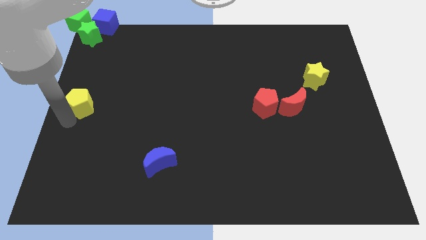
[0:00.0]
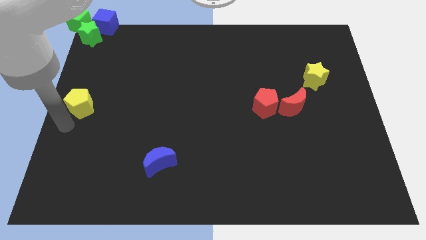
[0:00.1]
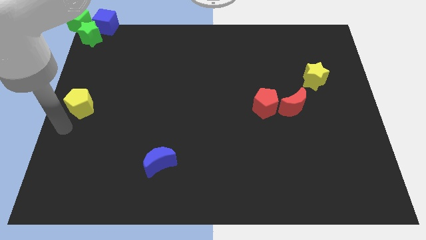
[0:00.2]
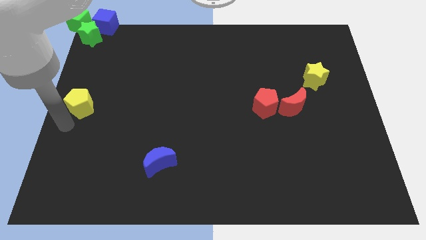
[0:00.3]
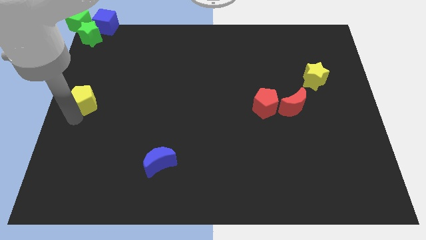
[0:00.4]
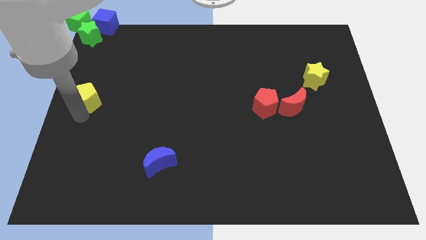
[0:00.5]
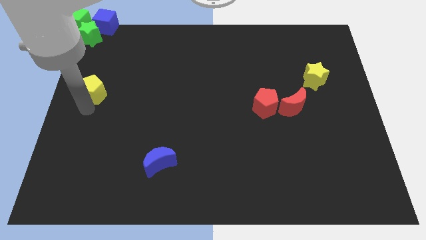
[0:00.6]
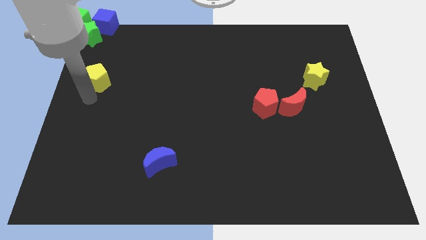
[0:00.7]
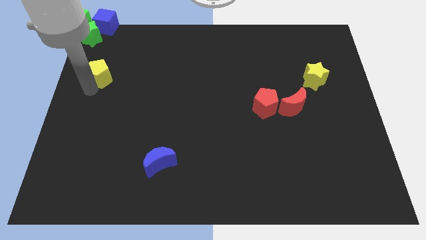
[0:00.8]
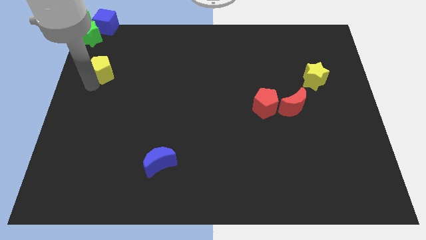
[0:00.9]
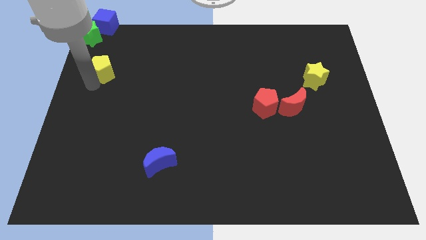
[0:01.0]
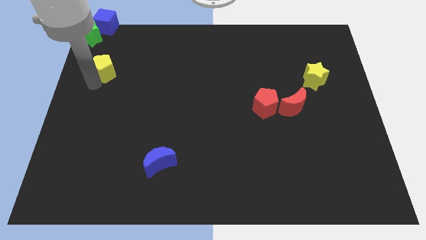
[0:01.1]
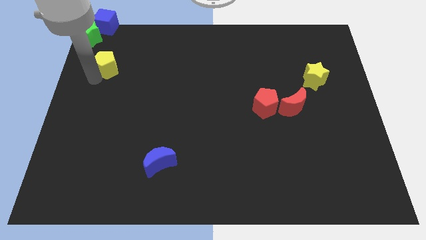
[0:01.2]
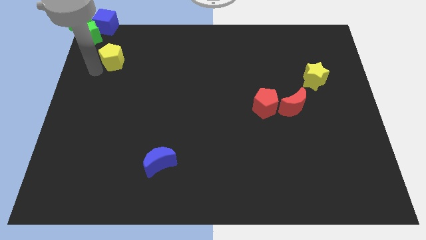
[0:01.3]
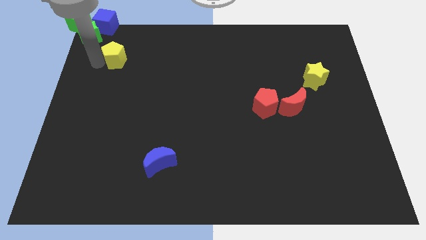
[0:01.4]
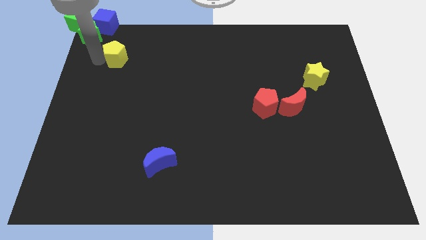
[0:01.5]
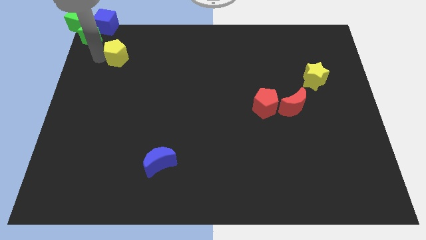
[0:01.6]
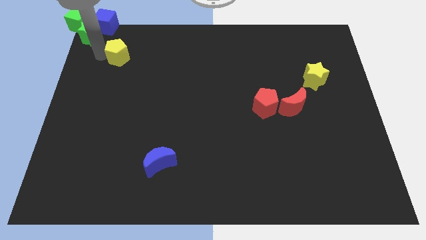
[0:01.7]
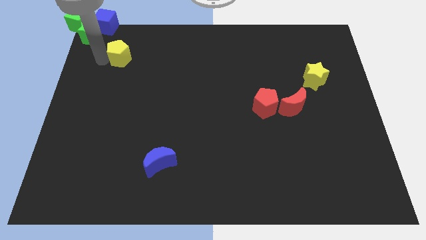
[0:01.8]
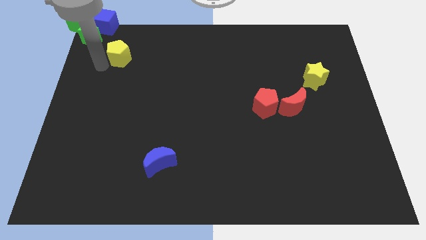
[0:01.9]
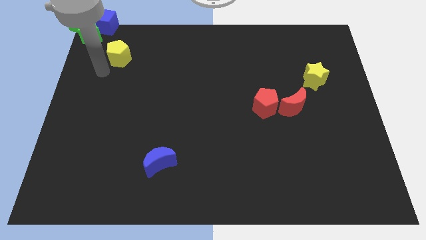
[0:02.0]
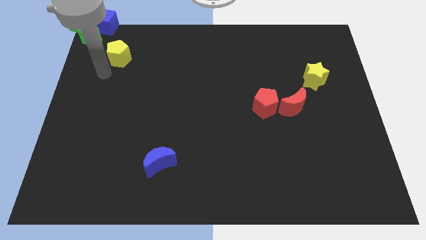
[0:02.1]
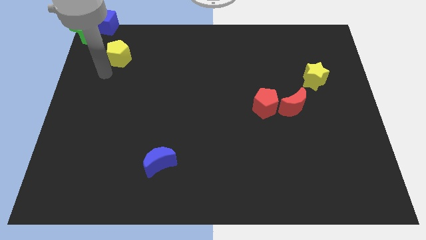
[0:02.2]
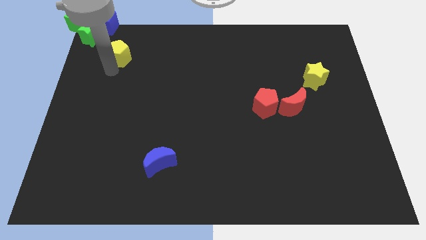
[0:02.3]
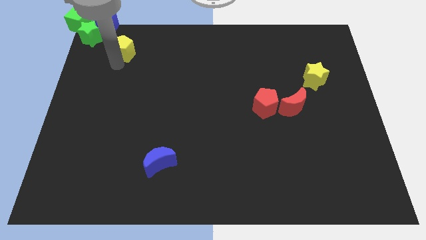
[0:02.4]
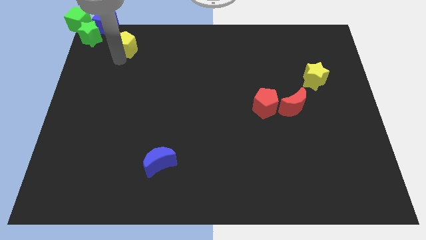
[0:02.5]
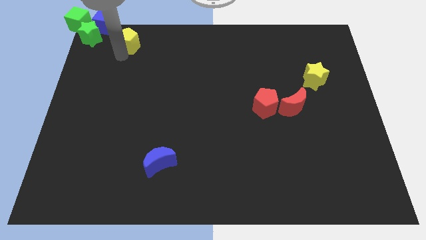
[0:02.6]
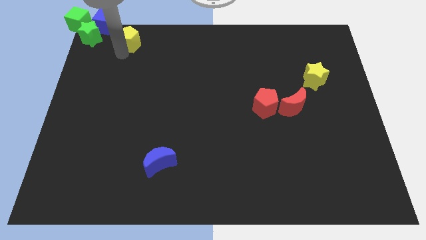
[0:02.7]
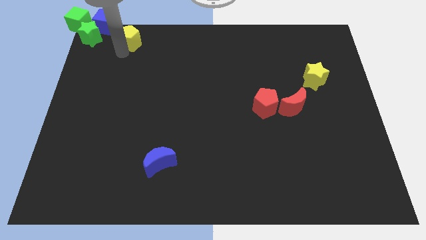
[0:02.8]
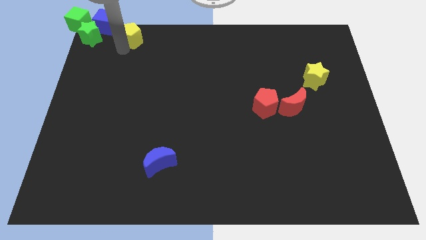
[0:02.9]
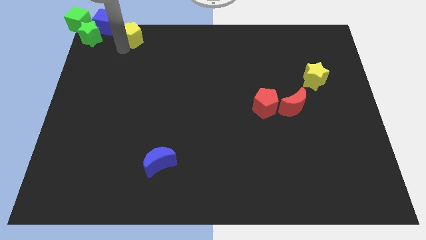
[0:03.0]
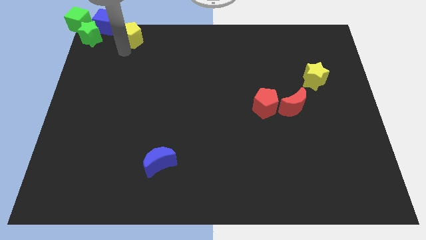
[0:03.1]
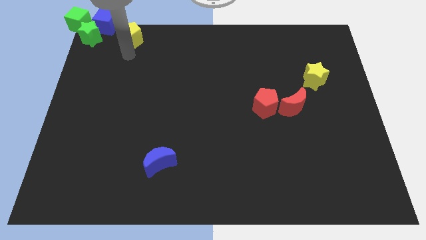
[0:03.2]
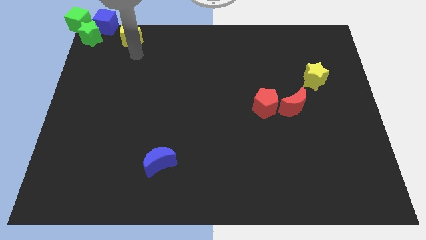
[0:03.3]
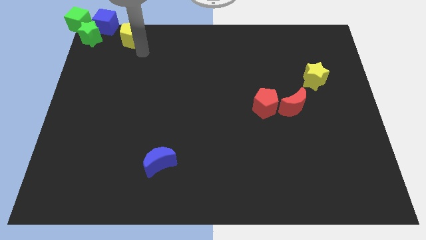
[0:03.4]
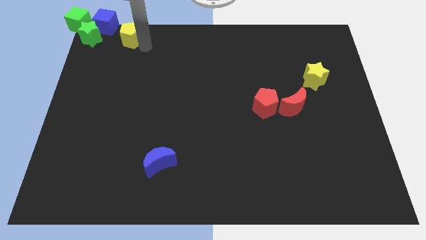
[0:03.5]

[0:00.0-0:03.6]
place the yellow pentagon below the blue cube

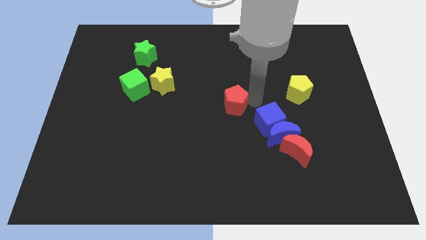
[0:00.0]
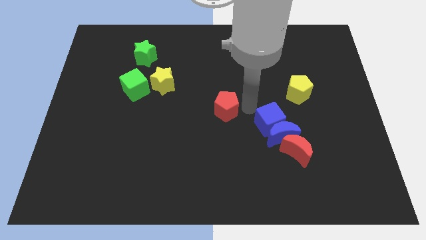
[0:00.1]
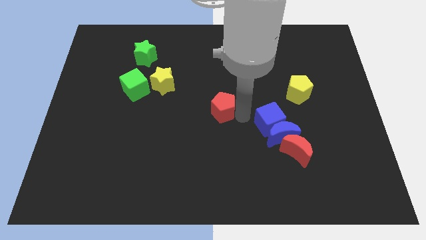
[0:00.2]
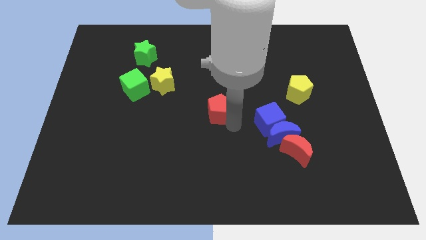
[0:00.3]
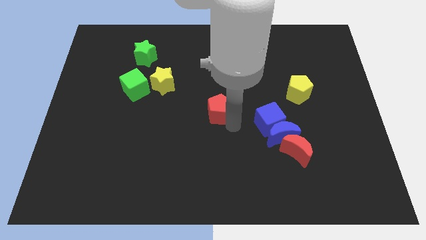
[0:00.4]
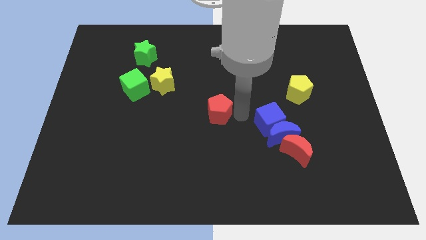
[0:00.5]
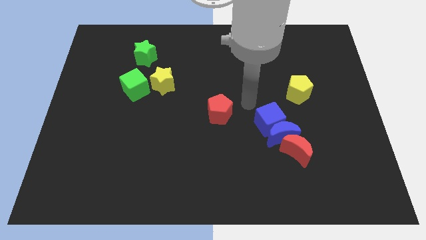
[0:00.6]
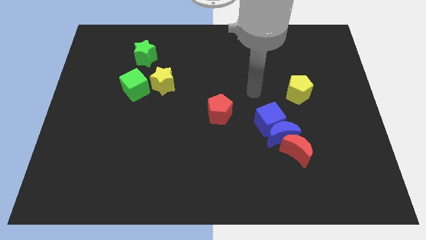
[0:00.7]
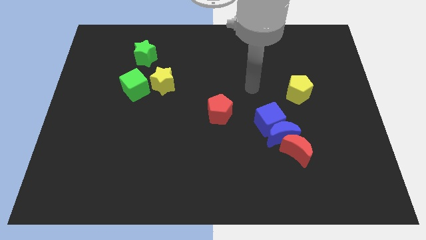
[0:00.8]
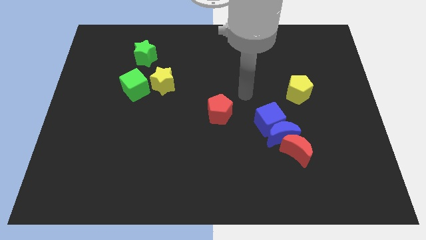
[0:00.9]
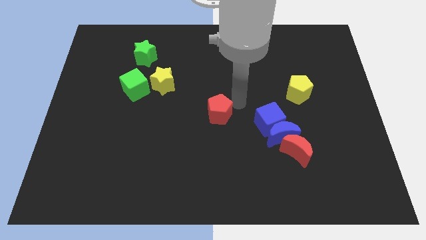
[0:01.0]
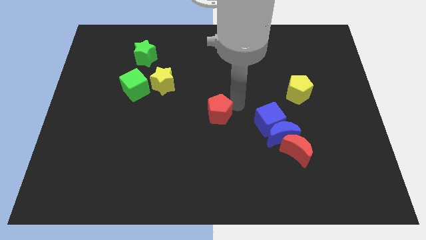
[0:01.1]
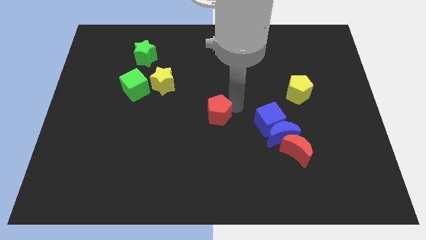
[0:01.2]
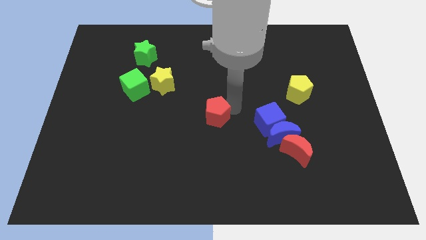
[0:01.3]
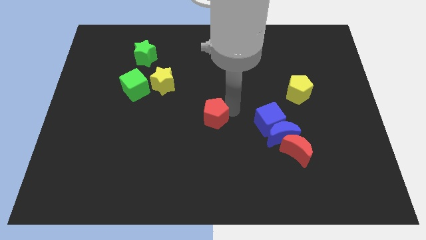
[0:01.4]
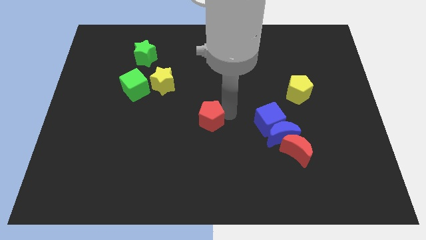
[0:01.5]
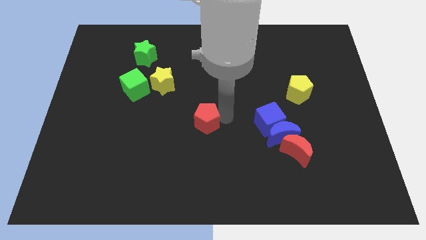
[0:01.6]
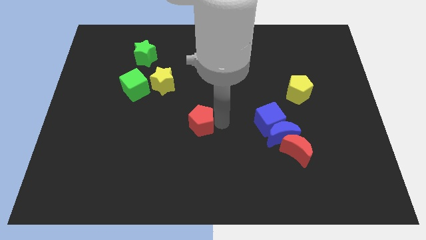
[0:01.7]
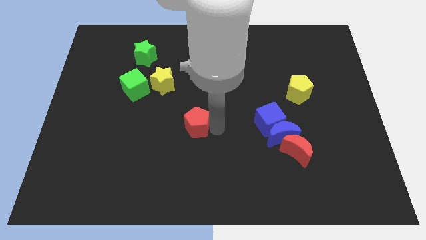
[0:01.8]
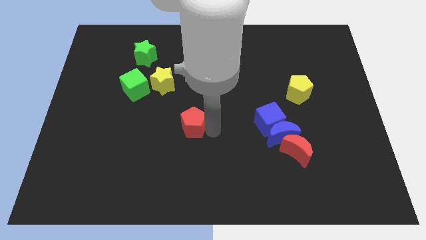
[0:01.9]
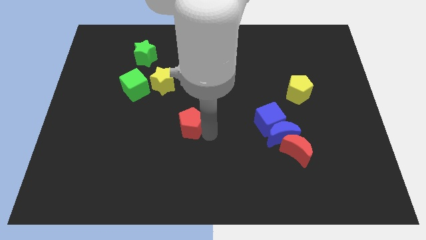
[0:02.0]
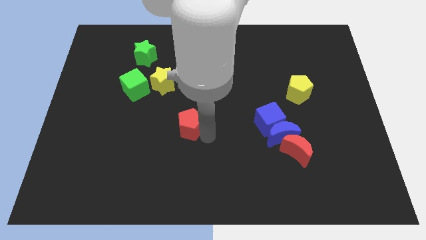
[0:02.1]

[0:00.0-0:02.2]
move red crescent to the center of the board

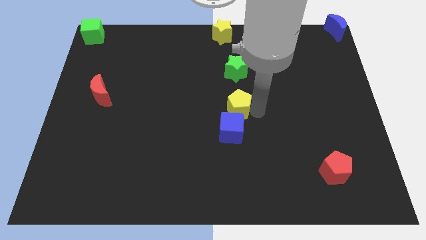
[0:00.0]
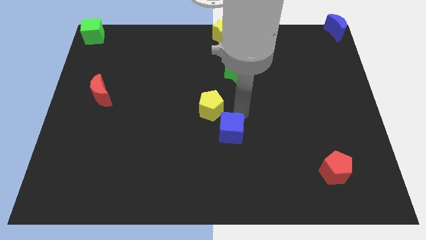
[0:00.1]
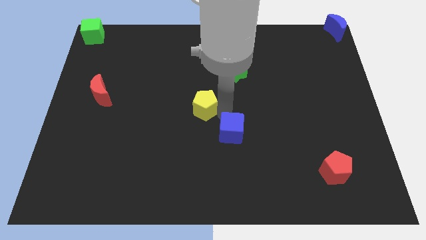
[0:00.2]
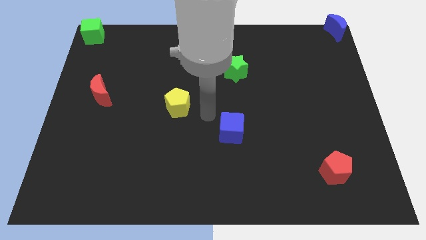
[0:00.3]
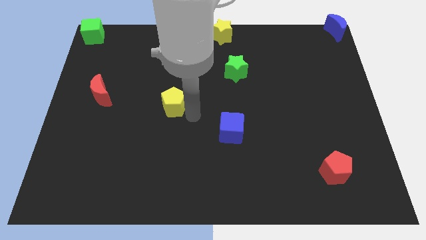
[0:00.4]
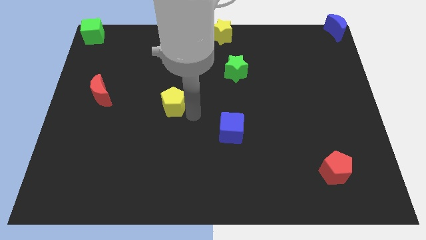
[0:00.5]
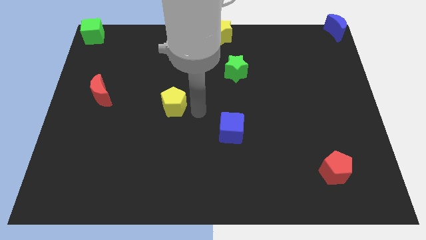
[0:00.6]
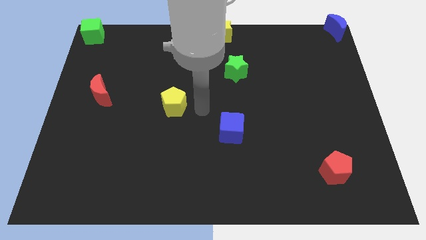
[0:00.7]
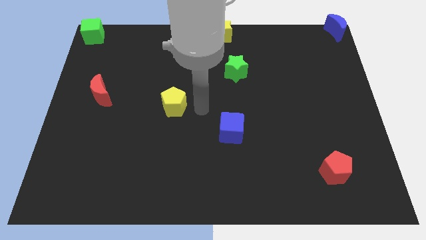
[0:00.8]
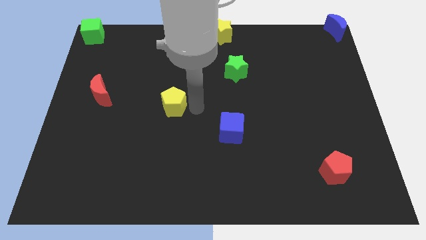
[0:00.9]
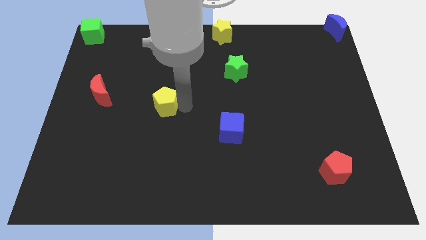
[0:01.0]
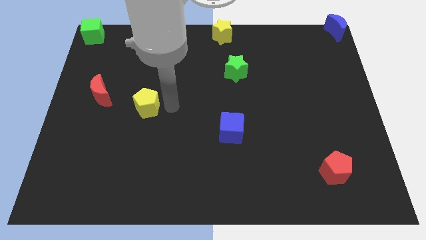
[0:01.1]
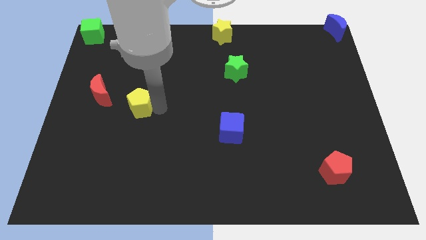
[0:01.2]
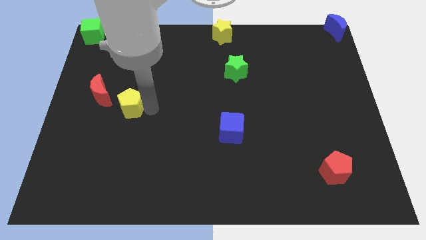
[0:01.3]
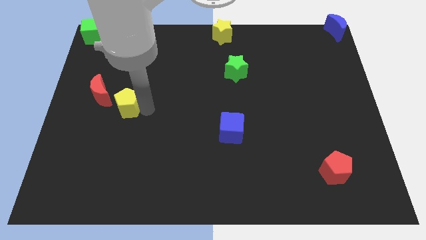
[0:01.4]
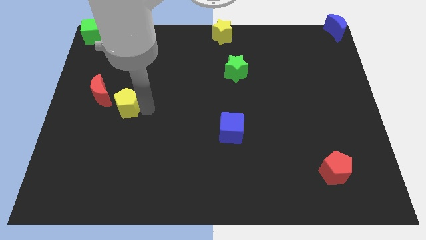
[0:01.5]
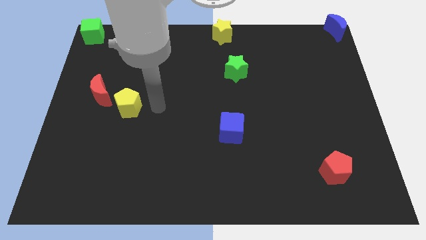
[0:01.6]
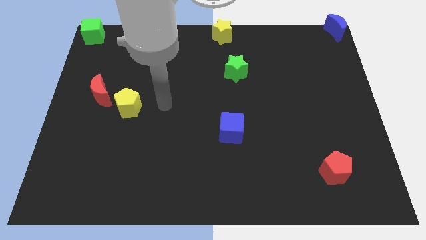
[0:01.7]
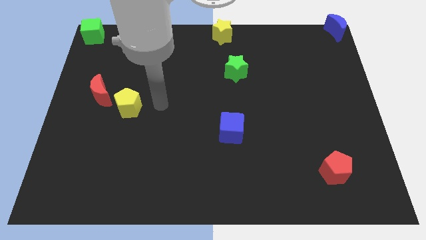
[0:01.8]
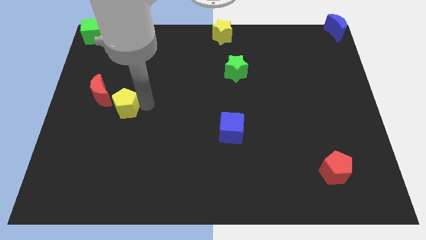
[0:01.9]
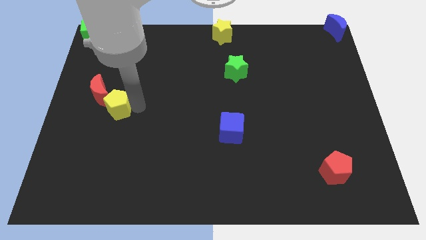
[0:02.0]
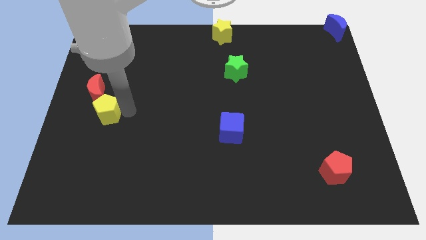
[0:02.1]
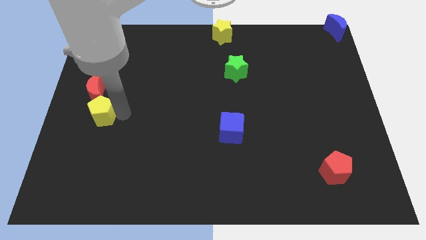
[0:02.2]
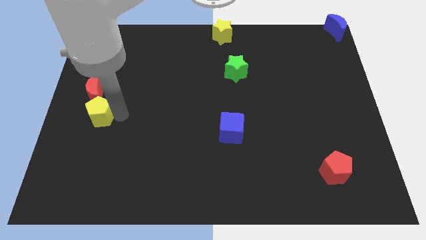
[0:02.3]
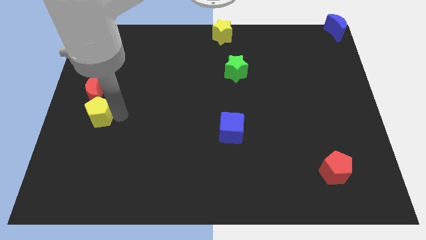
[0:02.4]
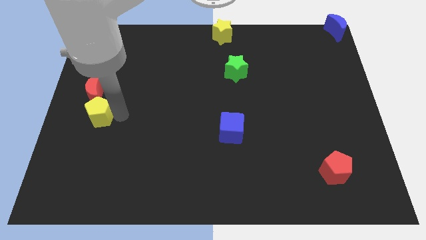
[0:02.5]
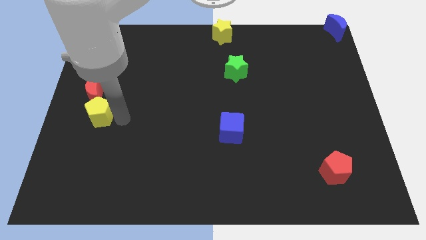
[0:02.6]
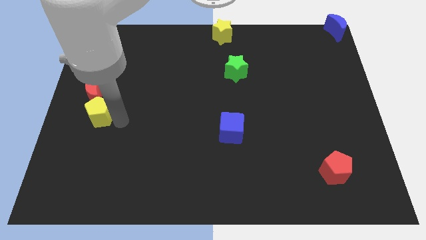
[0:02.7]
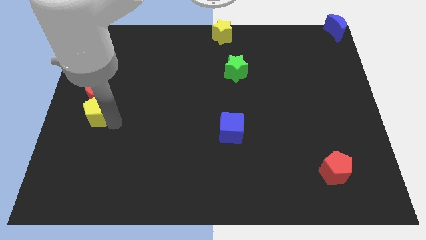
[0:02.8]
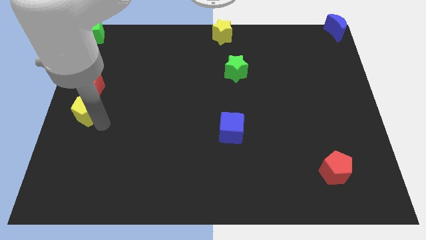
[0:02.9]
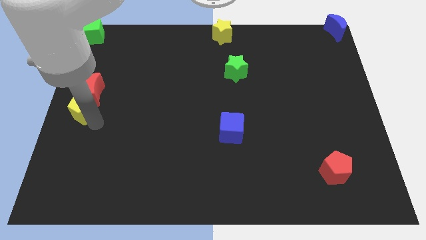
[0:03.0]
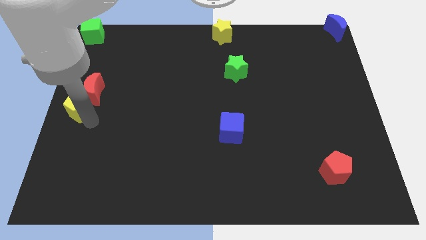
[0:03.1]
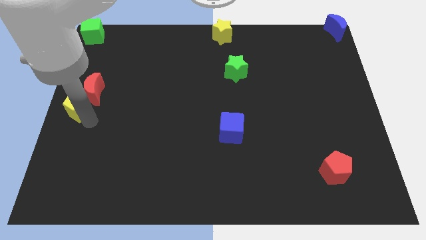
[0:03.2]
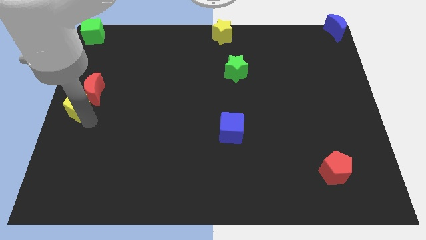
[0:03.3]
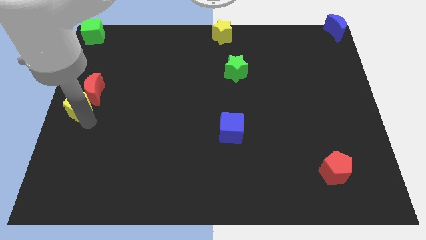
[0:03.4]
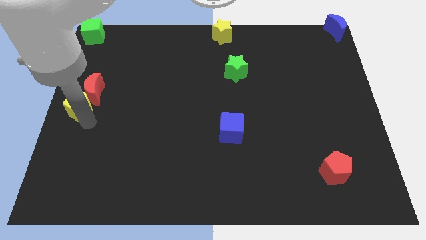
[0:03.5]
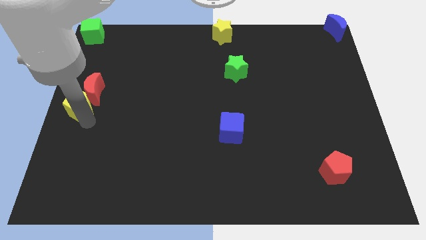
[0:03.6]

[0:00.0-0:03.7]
push the yellow pentagon below the red crescent
